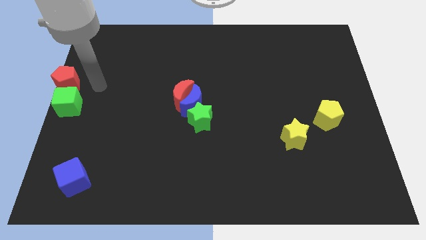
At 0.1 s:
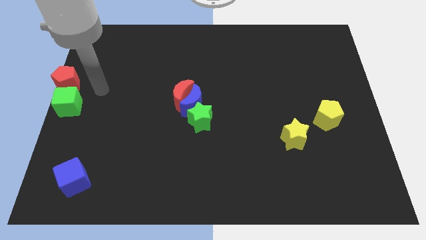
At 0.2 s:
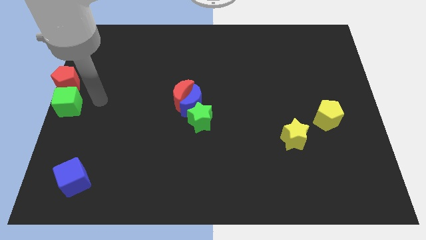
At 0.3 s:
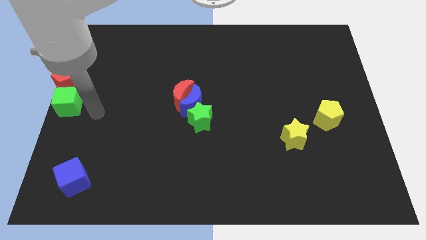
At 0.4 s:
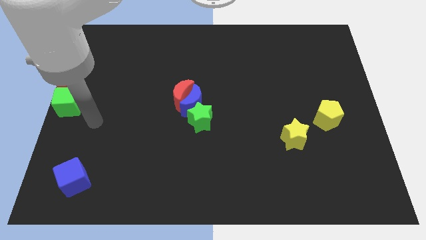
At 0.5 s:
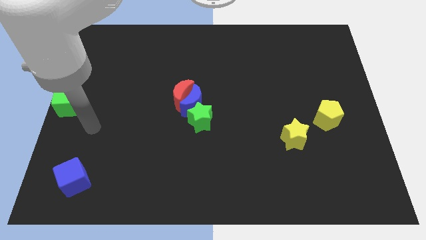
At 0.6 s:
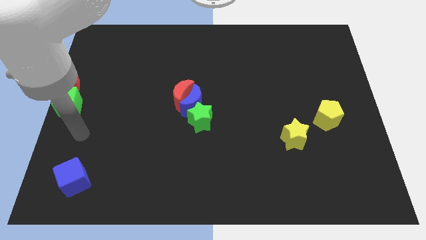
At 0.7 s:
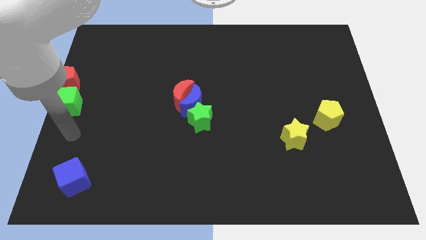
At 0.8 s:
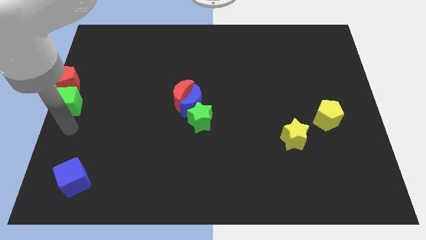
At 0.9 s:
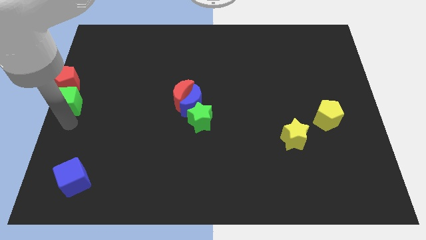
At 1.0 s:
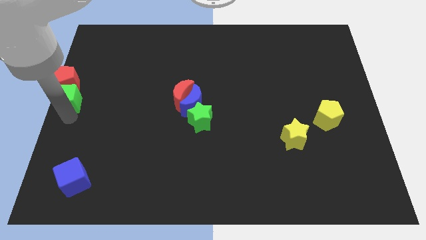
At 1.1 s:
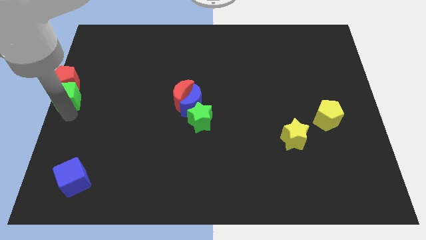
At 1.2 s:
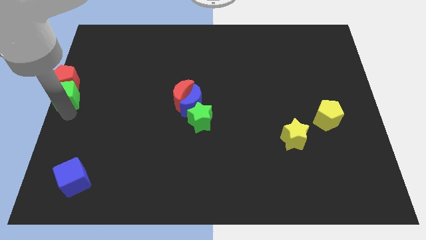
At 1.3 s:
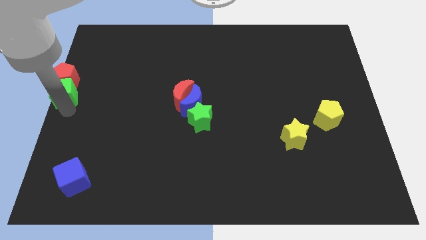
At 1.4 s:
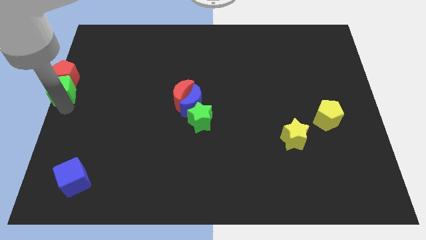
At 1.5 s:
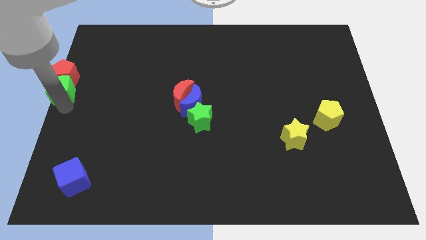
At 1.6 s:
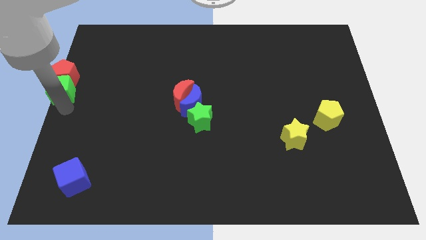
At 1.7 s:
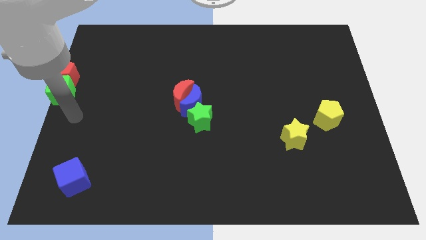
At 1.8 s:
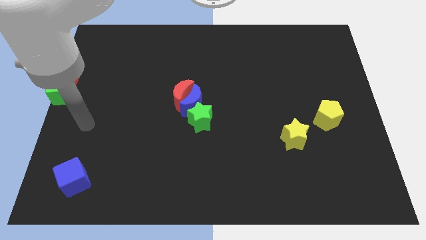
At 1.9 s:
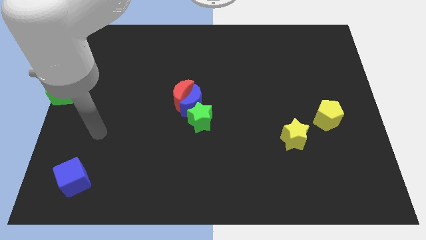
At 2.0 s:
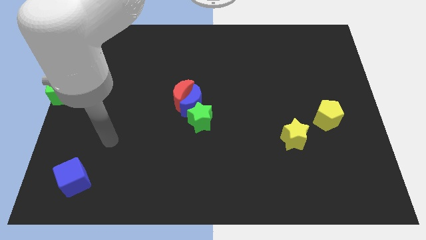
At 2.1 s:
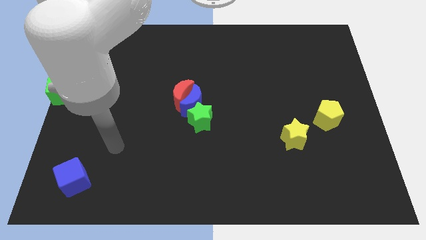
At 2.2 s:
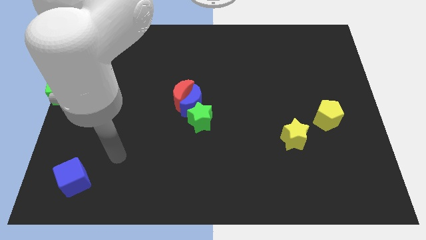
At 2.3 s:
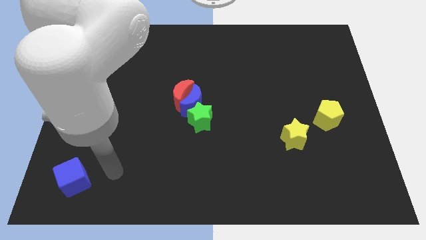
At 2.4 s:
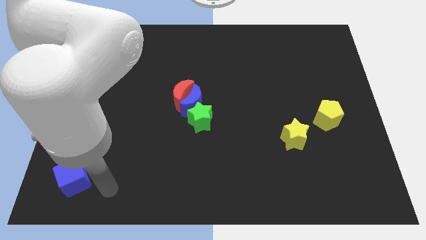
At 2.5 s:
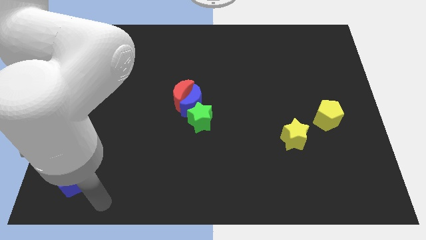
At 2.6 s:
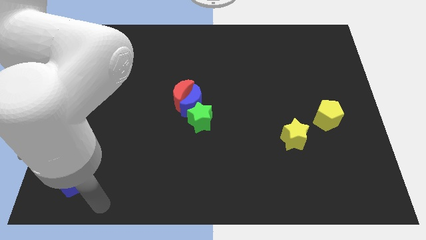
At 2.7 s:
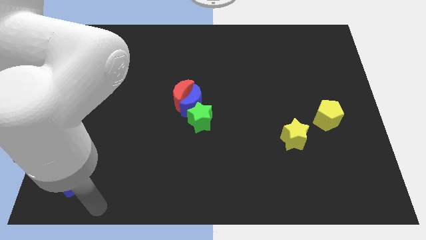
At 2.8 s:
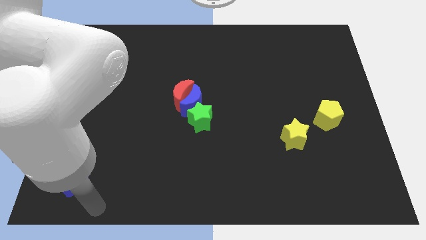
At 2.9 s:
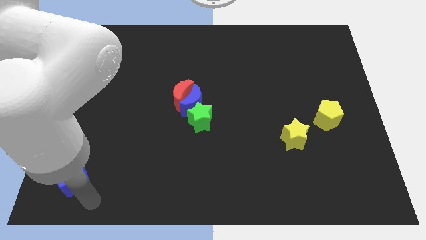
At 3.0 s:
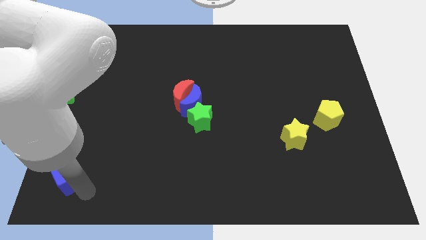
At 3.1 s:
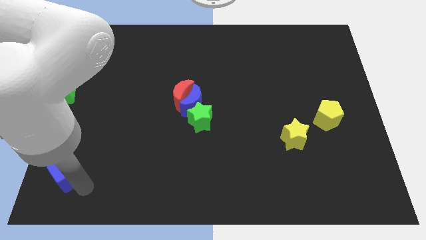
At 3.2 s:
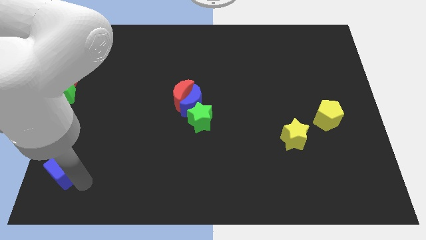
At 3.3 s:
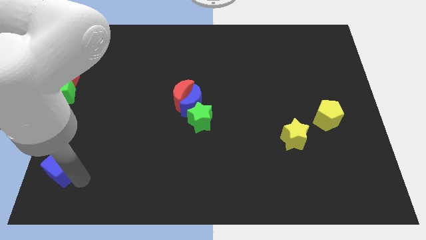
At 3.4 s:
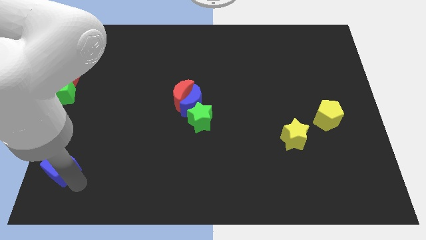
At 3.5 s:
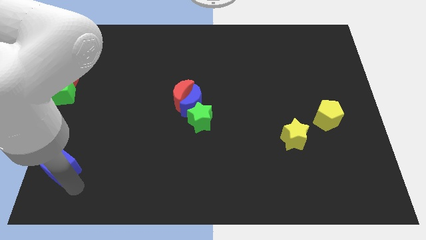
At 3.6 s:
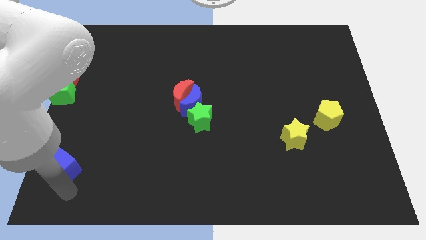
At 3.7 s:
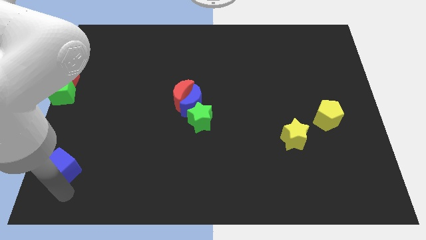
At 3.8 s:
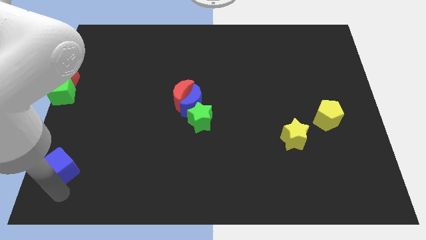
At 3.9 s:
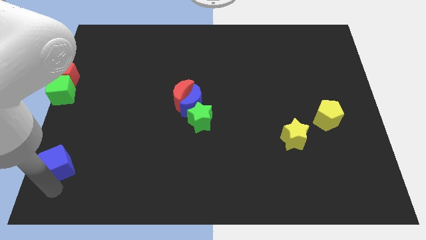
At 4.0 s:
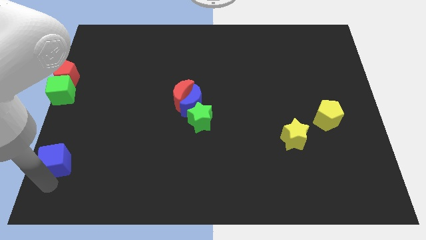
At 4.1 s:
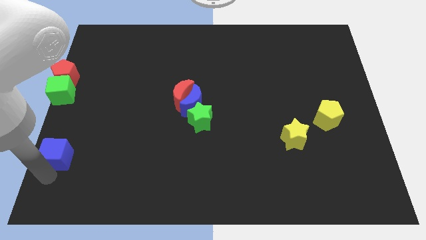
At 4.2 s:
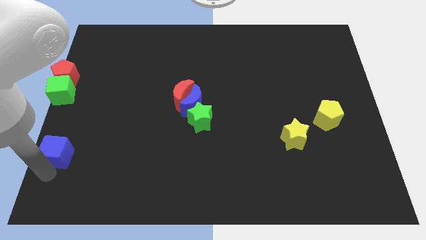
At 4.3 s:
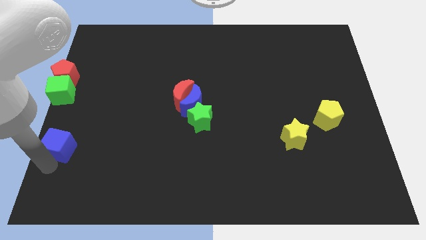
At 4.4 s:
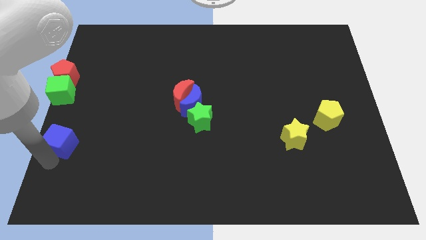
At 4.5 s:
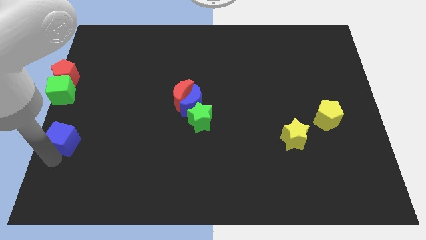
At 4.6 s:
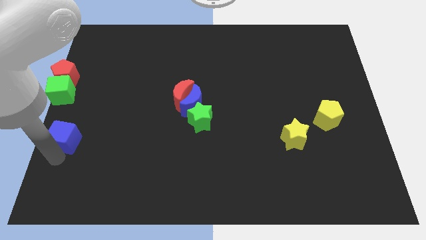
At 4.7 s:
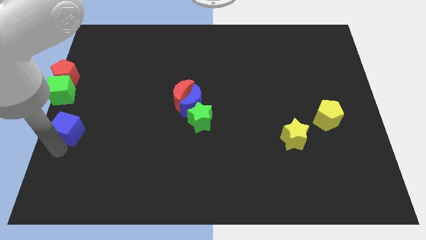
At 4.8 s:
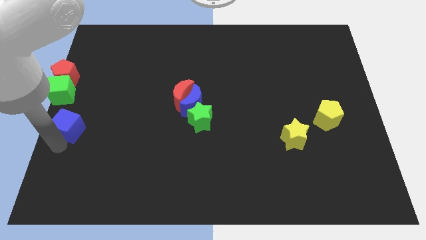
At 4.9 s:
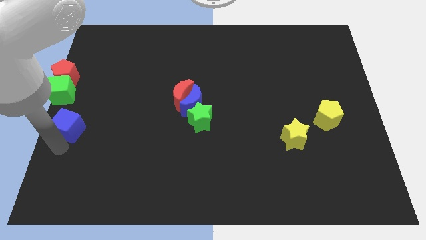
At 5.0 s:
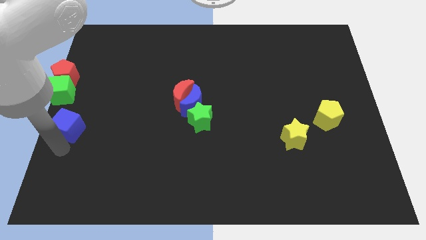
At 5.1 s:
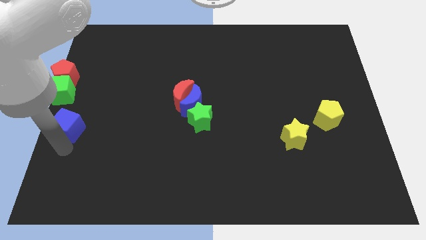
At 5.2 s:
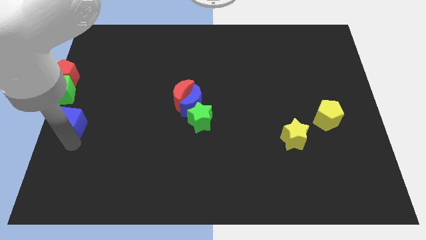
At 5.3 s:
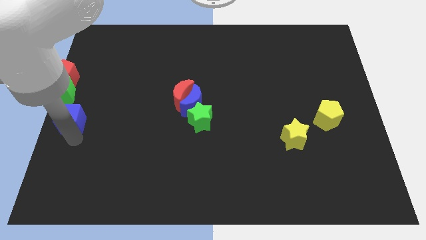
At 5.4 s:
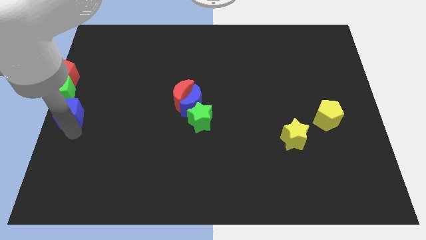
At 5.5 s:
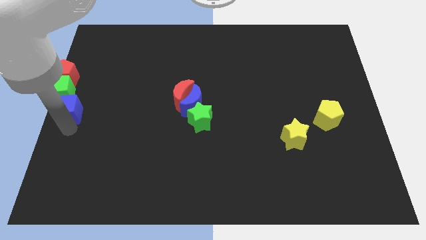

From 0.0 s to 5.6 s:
move the blue cube vertically below to the green cube

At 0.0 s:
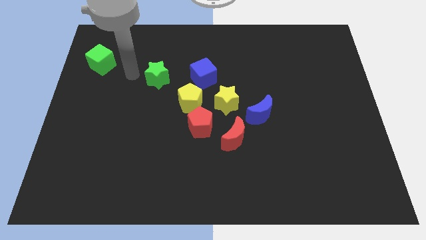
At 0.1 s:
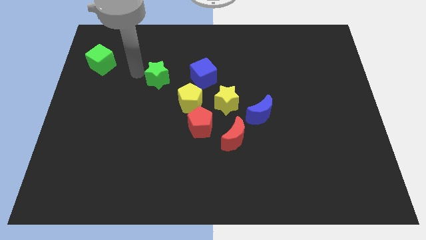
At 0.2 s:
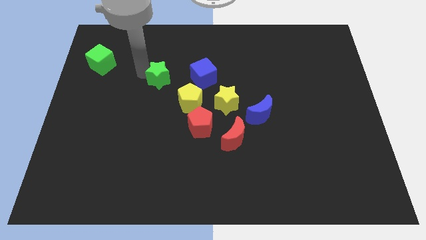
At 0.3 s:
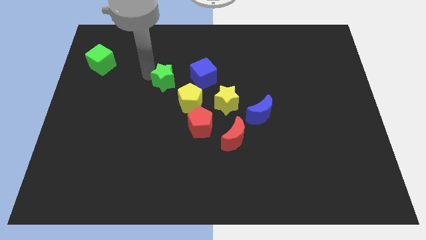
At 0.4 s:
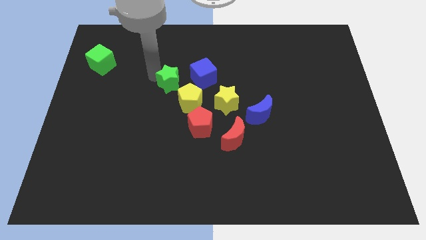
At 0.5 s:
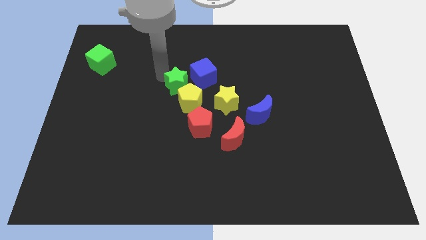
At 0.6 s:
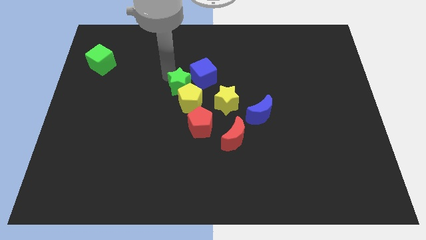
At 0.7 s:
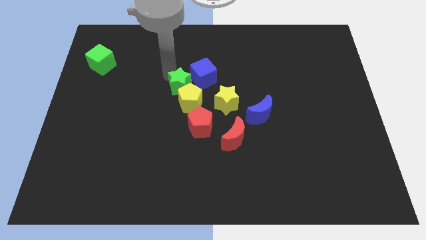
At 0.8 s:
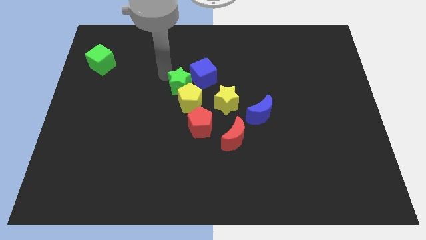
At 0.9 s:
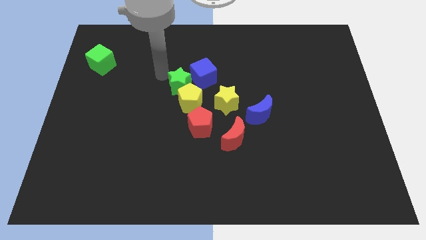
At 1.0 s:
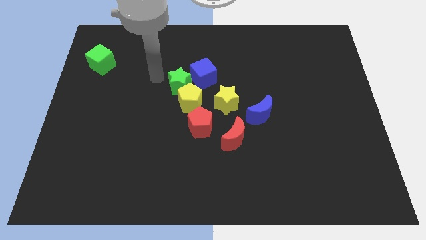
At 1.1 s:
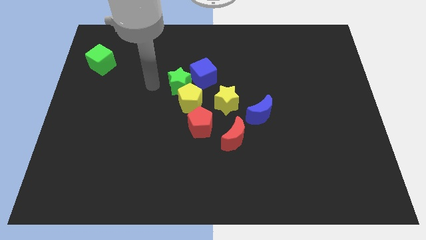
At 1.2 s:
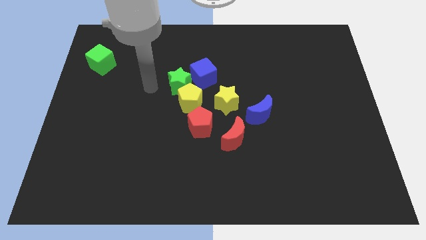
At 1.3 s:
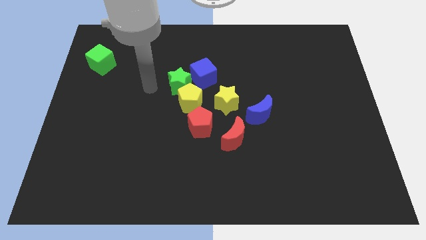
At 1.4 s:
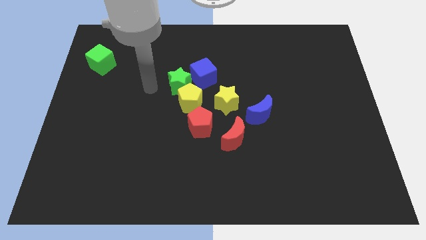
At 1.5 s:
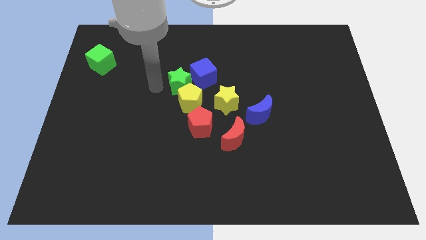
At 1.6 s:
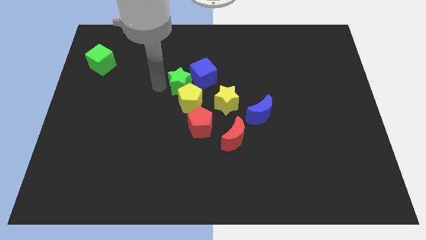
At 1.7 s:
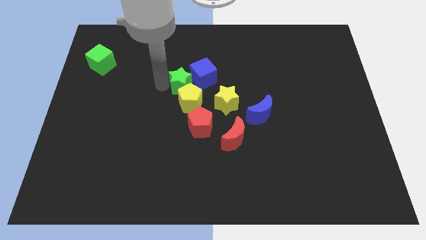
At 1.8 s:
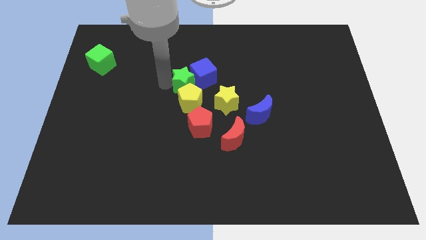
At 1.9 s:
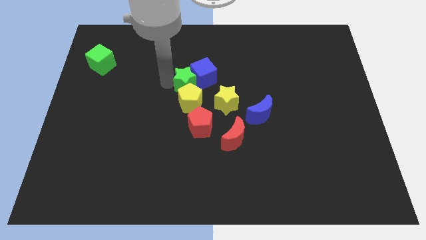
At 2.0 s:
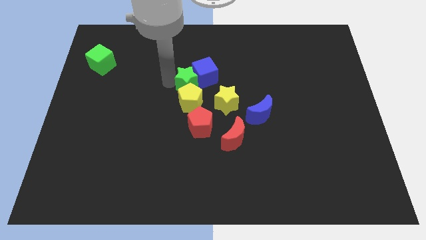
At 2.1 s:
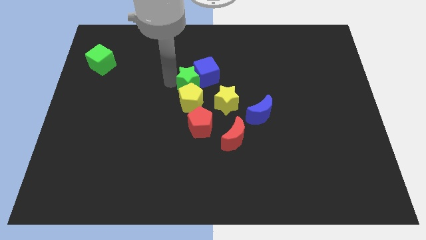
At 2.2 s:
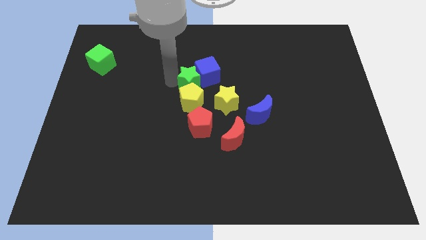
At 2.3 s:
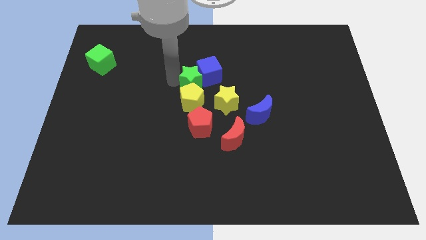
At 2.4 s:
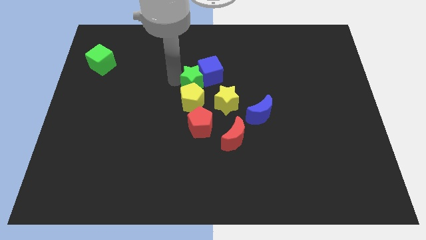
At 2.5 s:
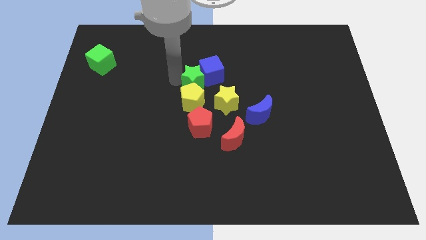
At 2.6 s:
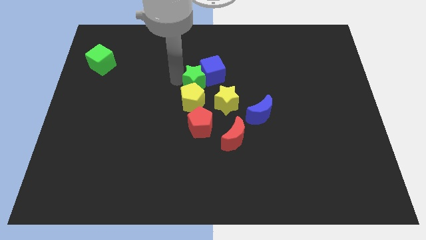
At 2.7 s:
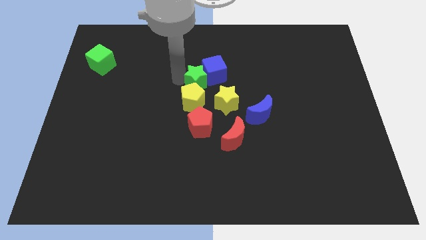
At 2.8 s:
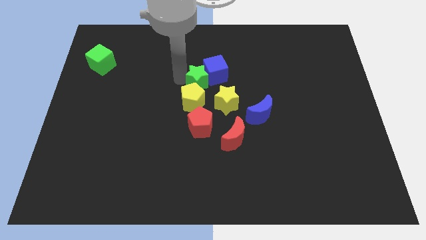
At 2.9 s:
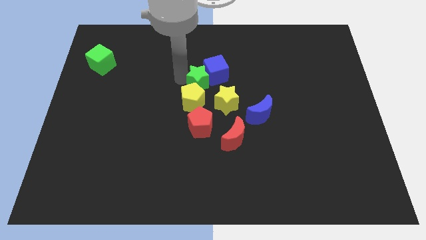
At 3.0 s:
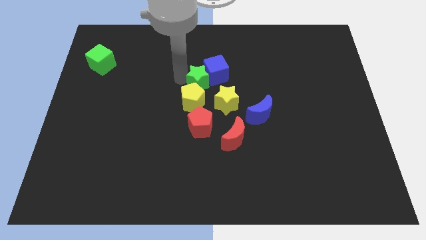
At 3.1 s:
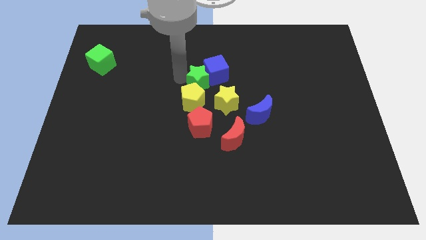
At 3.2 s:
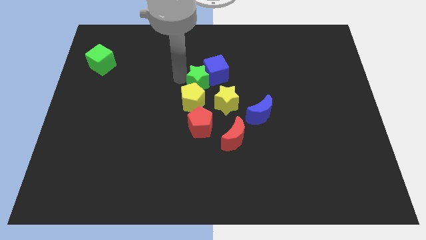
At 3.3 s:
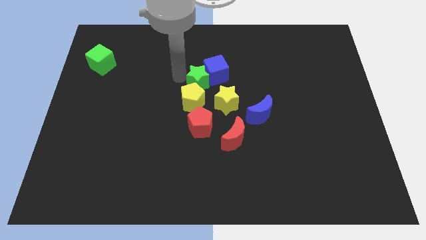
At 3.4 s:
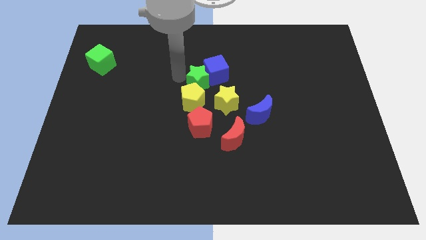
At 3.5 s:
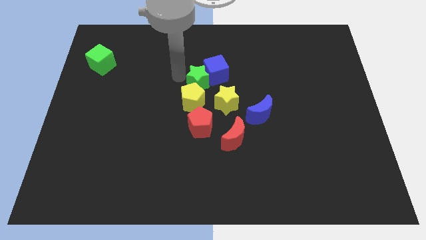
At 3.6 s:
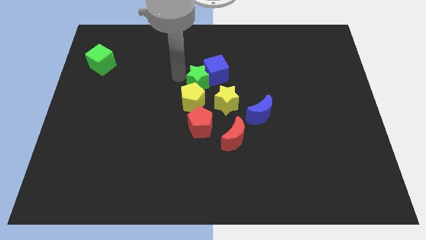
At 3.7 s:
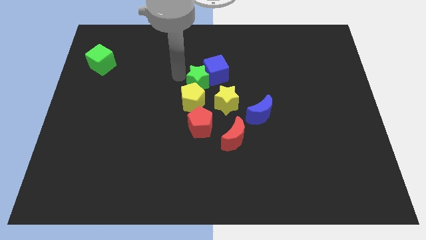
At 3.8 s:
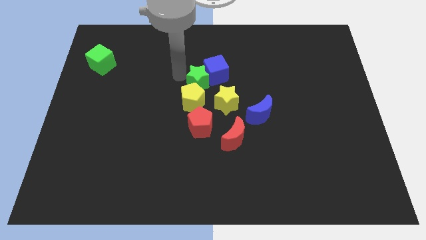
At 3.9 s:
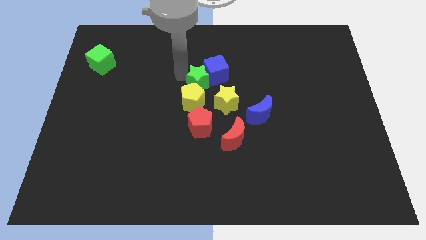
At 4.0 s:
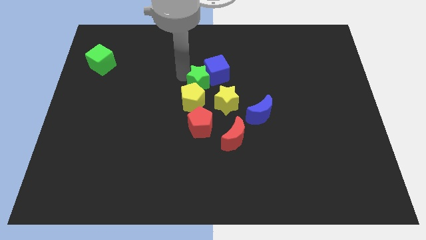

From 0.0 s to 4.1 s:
place the green star in between the blue cube and yellow pentagon
